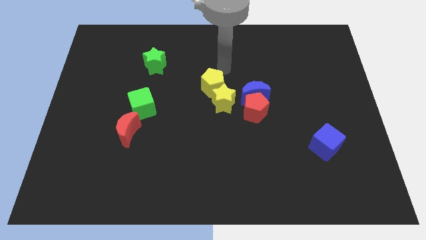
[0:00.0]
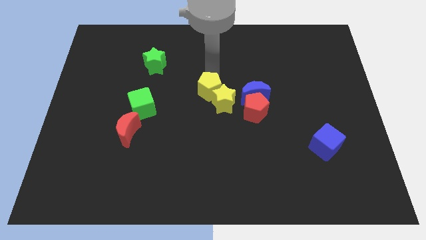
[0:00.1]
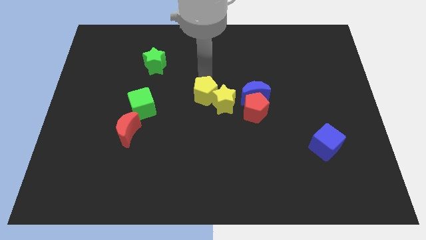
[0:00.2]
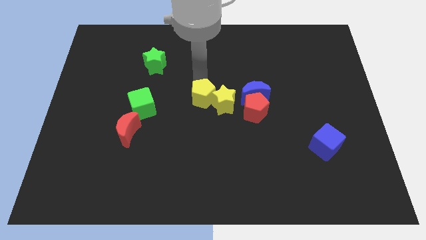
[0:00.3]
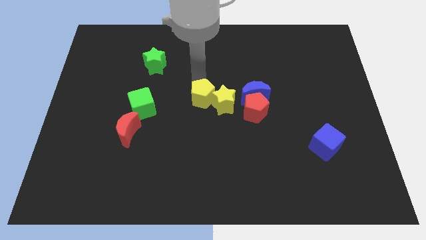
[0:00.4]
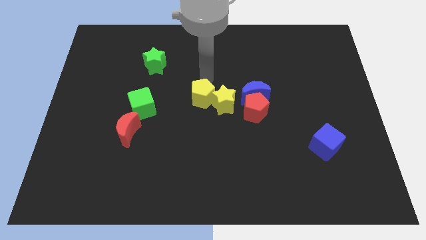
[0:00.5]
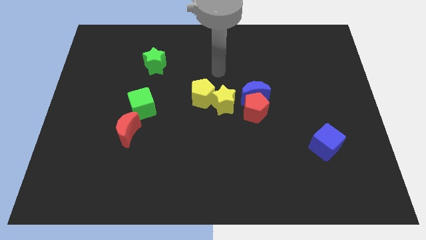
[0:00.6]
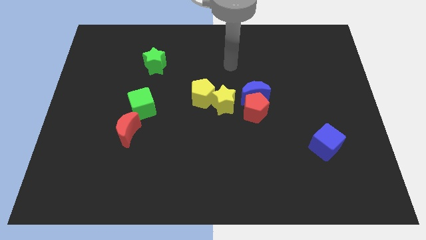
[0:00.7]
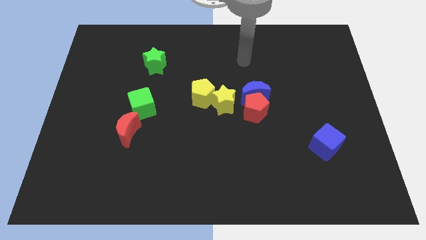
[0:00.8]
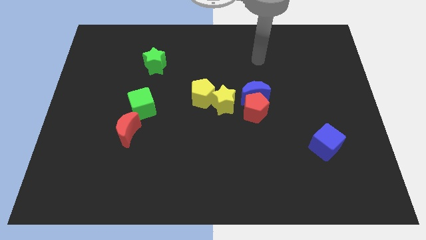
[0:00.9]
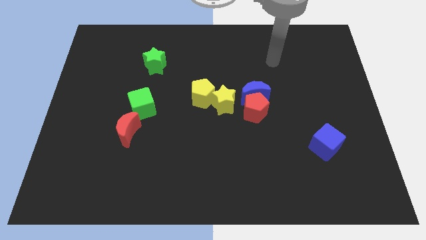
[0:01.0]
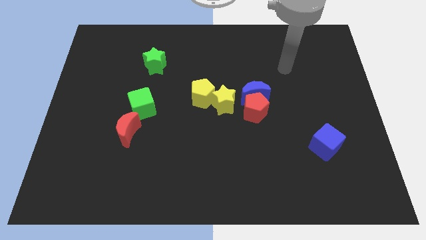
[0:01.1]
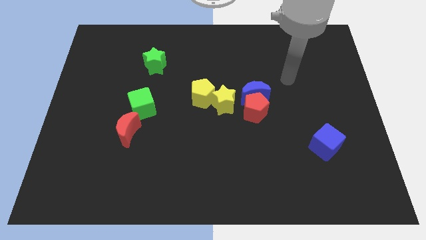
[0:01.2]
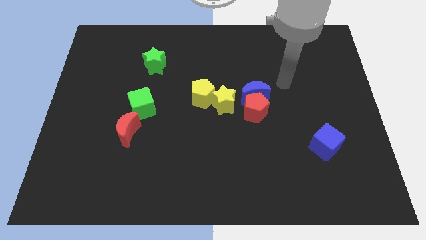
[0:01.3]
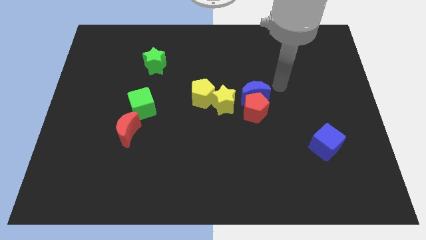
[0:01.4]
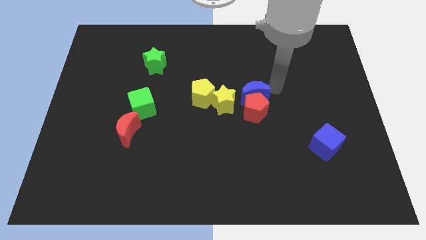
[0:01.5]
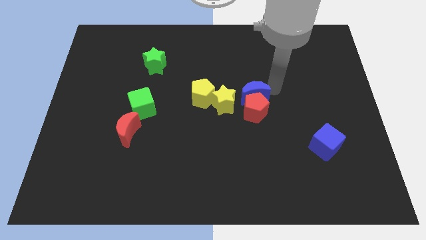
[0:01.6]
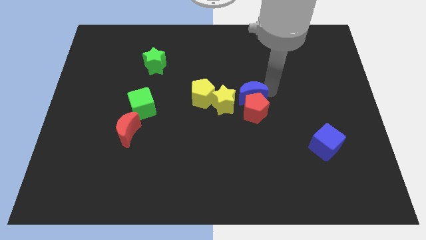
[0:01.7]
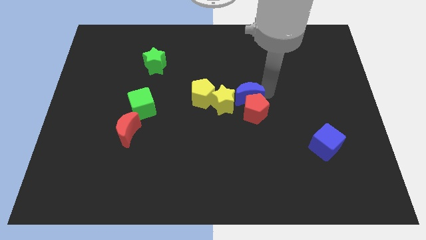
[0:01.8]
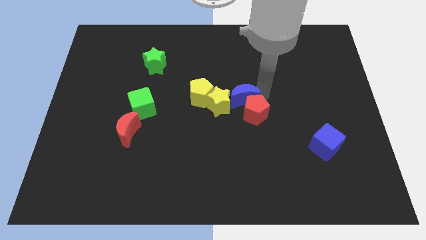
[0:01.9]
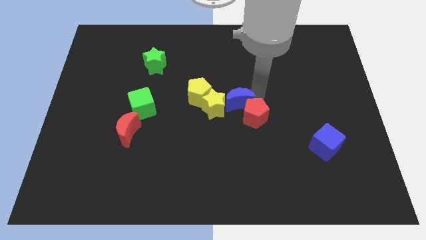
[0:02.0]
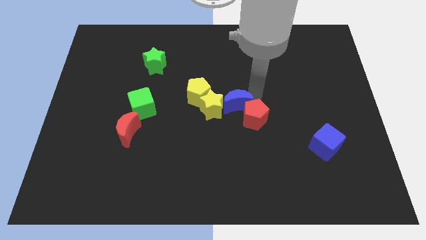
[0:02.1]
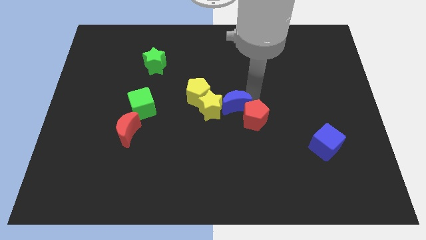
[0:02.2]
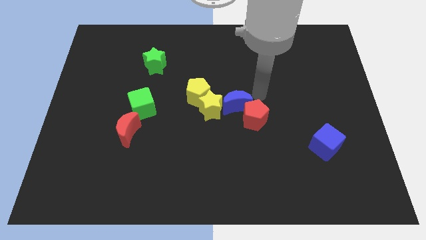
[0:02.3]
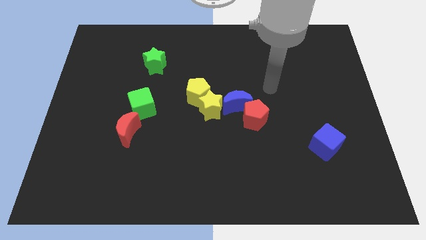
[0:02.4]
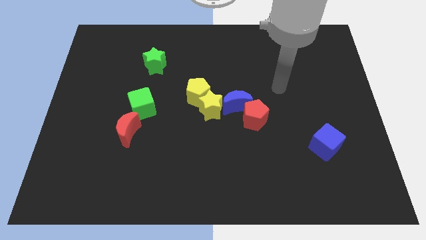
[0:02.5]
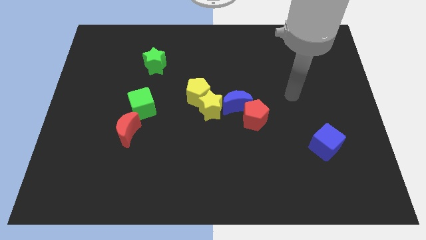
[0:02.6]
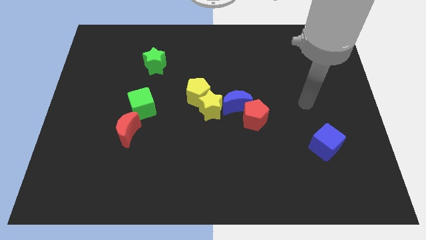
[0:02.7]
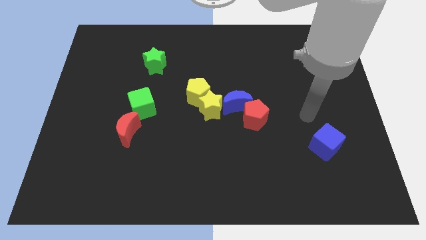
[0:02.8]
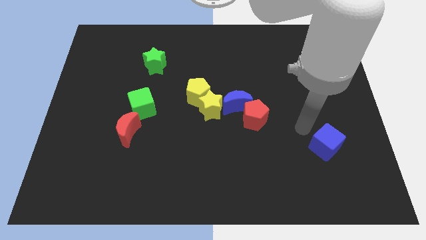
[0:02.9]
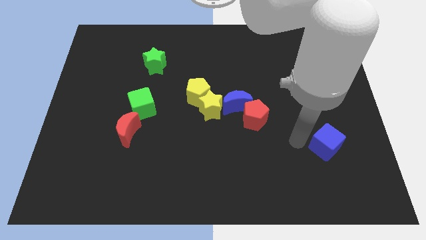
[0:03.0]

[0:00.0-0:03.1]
arrange the group of blocks at the center of the board

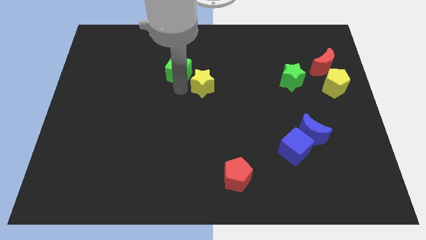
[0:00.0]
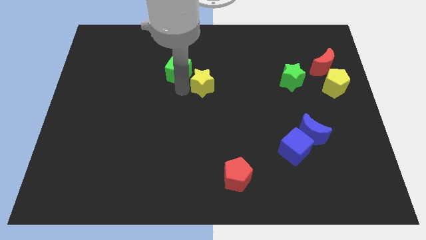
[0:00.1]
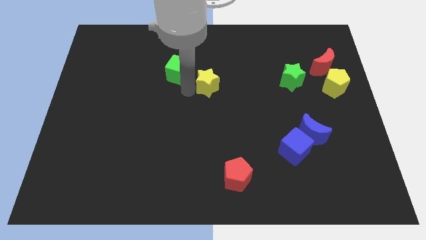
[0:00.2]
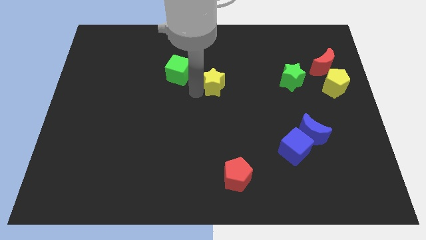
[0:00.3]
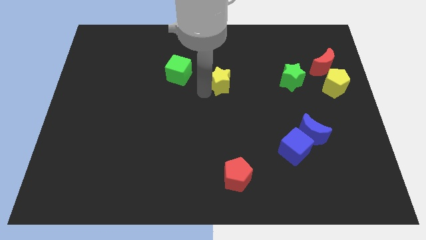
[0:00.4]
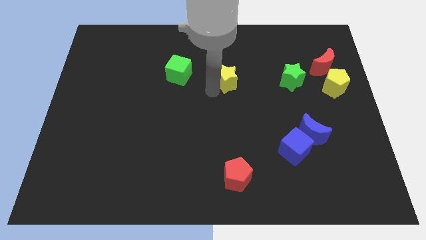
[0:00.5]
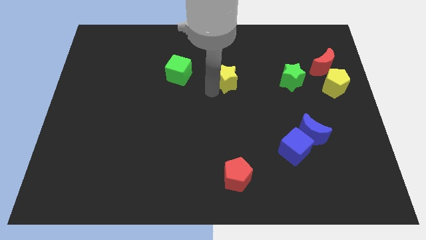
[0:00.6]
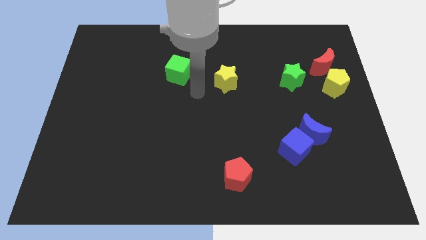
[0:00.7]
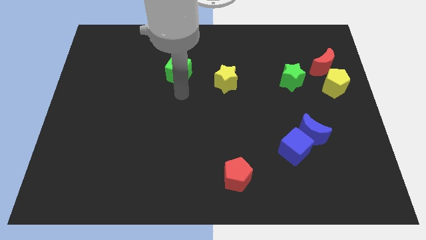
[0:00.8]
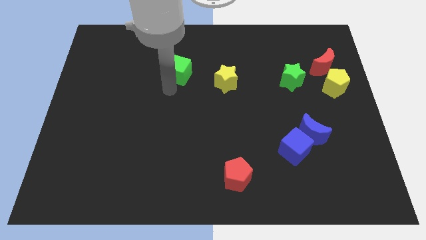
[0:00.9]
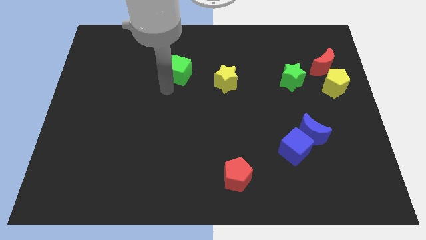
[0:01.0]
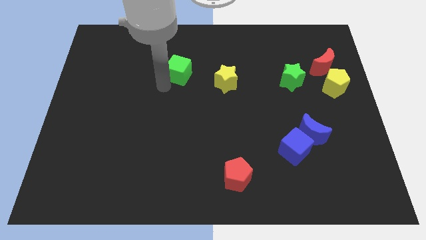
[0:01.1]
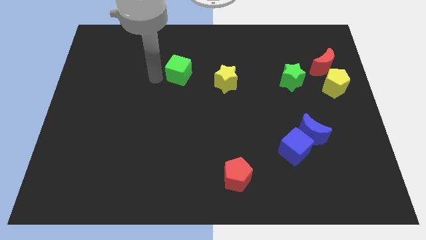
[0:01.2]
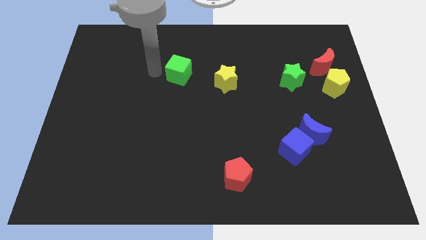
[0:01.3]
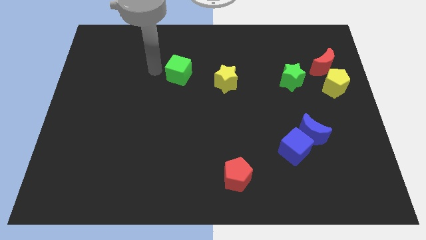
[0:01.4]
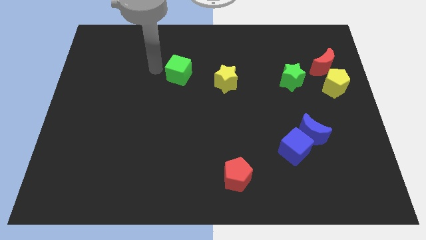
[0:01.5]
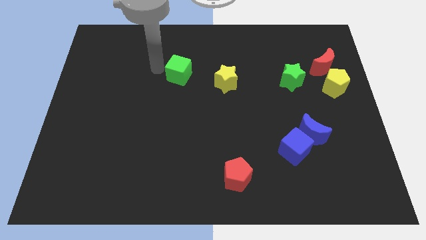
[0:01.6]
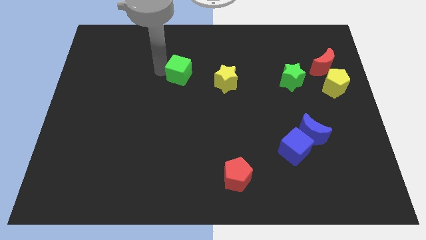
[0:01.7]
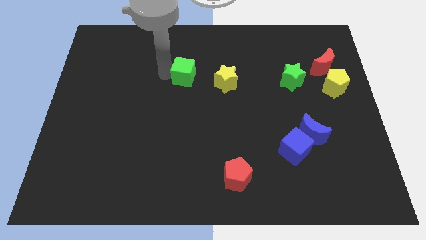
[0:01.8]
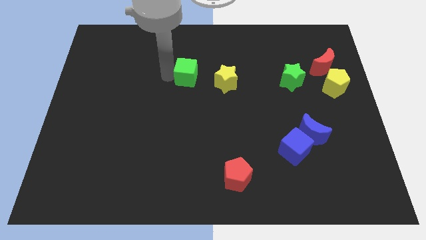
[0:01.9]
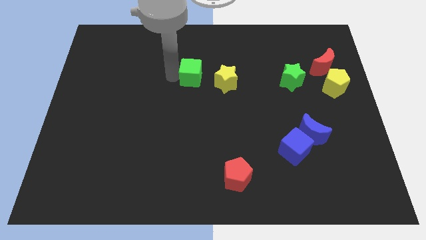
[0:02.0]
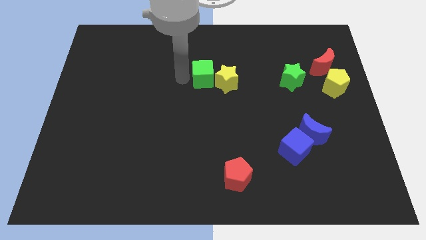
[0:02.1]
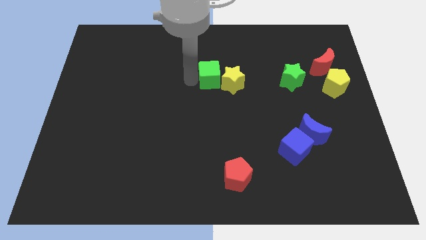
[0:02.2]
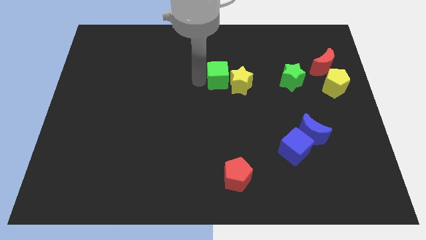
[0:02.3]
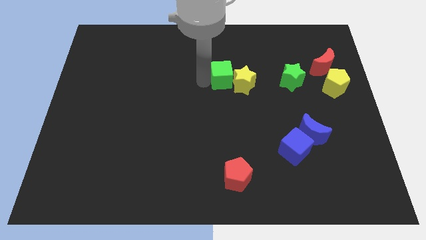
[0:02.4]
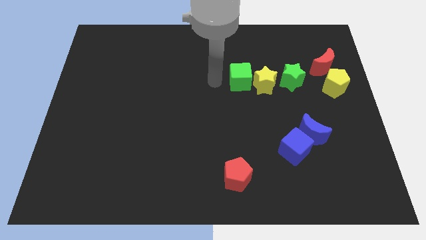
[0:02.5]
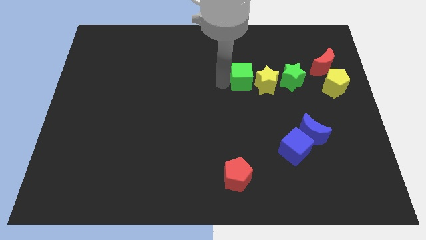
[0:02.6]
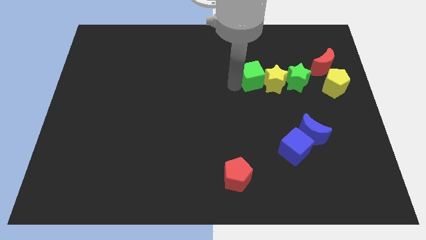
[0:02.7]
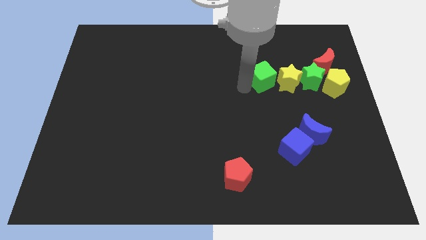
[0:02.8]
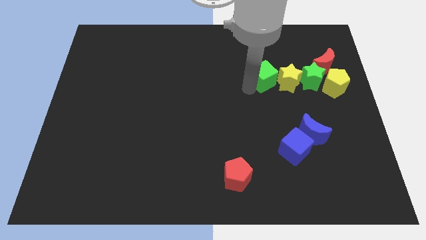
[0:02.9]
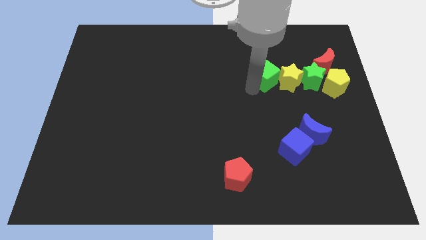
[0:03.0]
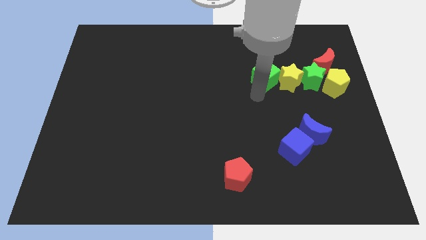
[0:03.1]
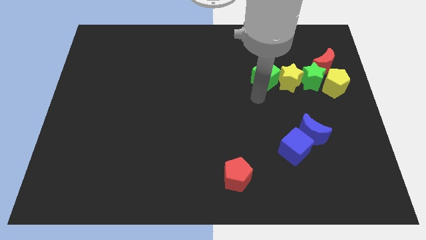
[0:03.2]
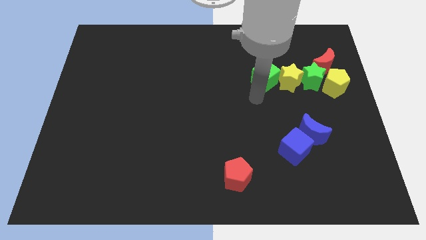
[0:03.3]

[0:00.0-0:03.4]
push green cube and yellow star into the group of blocks

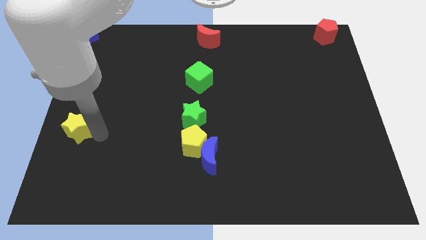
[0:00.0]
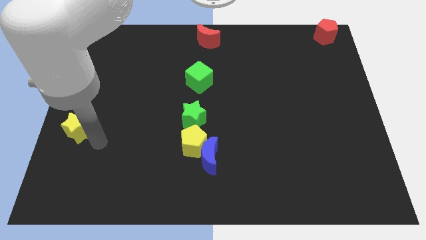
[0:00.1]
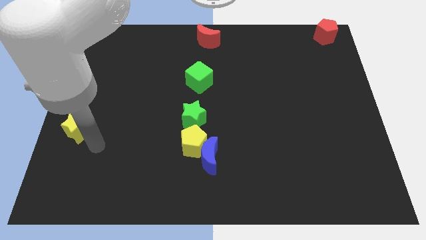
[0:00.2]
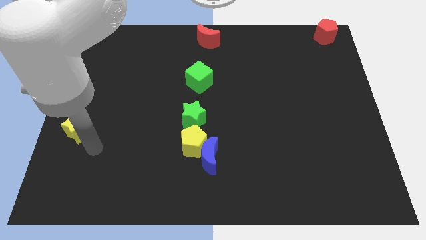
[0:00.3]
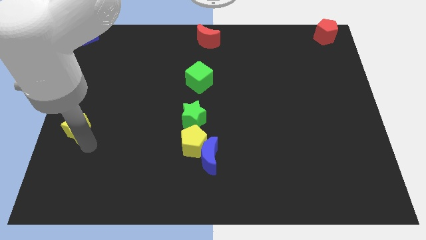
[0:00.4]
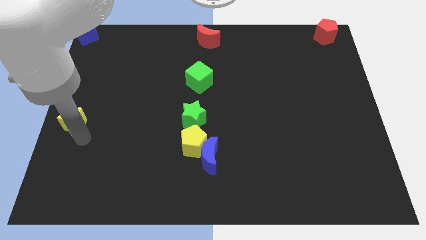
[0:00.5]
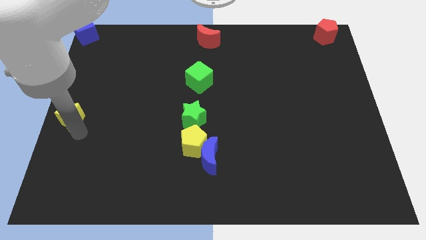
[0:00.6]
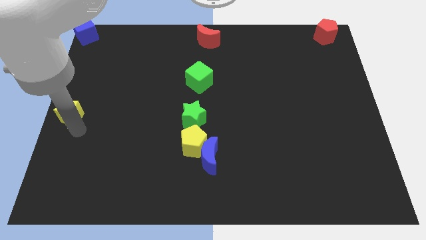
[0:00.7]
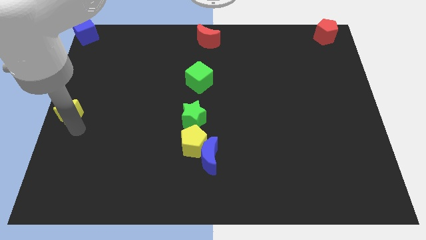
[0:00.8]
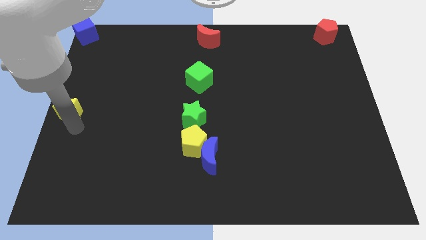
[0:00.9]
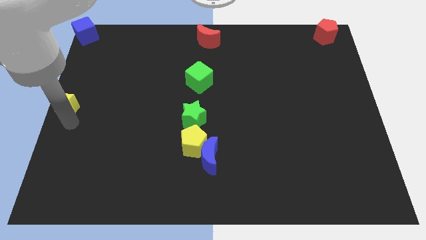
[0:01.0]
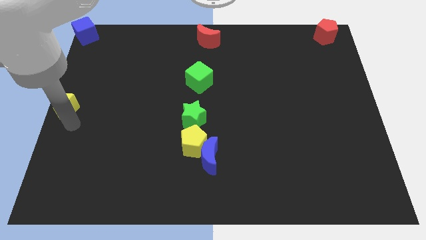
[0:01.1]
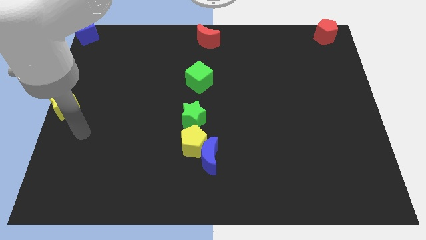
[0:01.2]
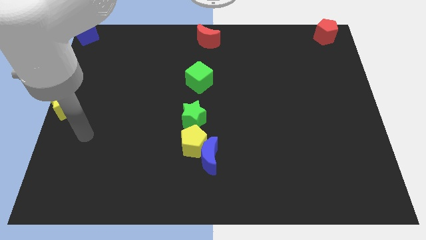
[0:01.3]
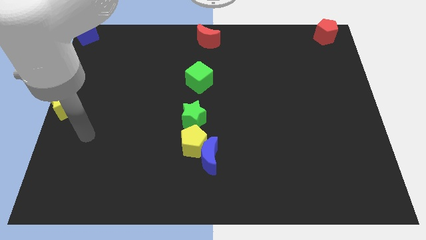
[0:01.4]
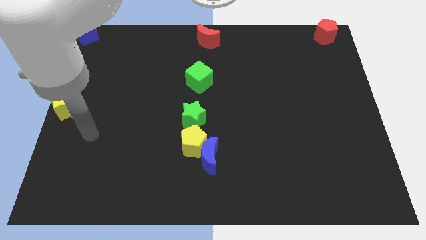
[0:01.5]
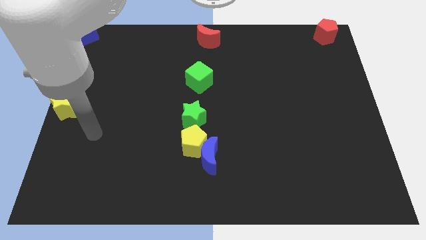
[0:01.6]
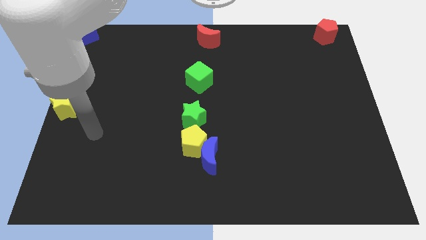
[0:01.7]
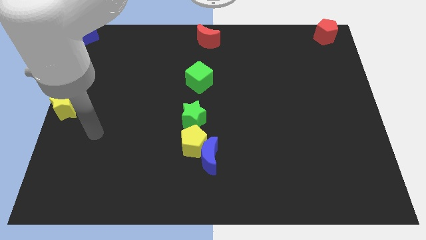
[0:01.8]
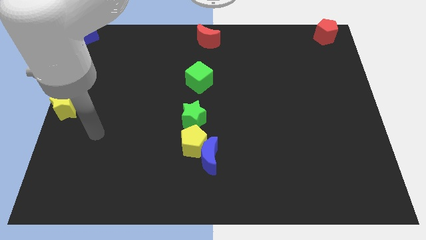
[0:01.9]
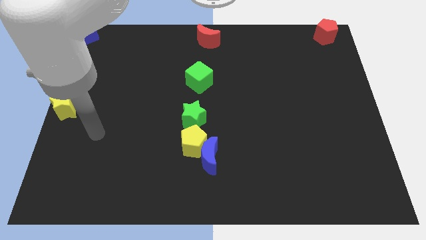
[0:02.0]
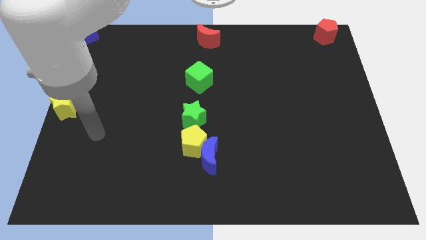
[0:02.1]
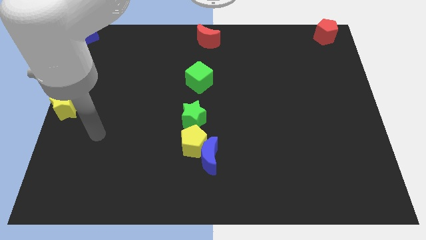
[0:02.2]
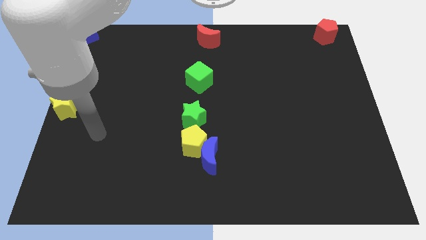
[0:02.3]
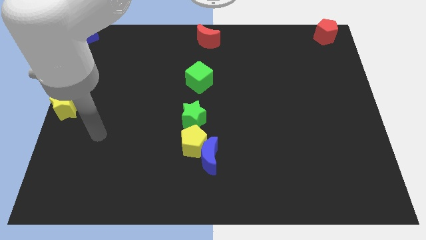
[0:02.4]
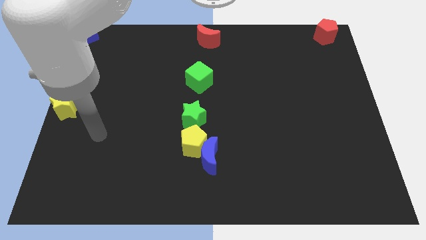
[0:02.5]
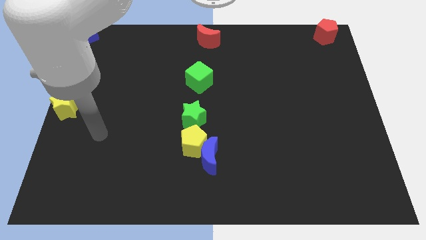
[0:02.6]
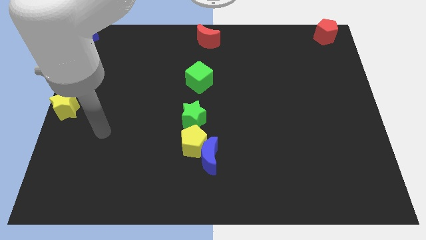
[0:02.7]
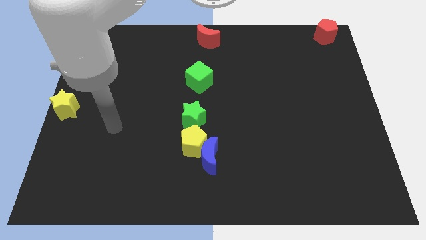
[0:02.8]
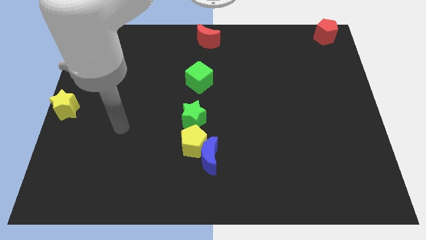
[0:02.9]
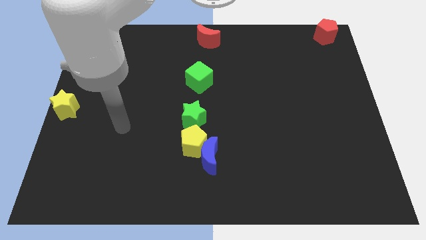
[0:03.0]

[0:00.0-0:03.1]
put the yellow star vertically at the bottom side of the blue cube
